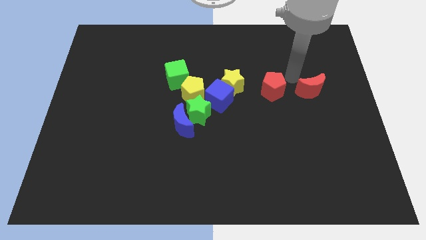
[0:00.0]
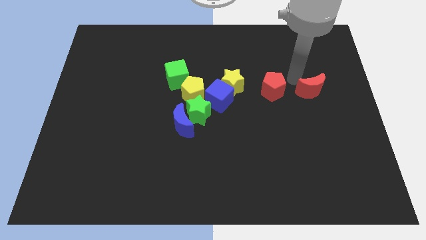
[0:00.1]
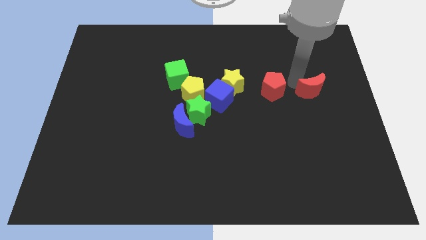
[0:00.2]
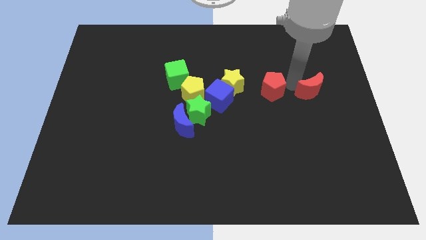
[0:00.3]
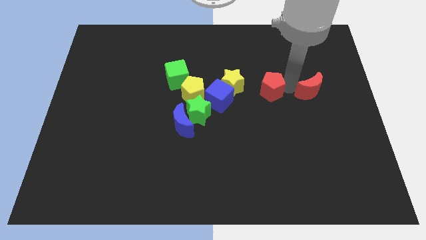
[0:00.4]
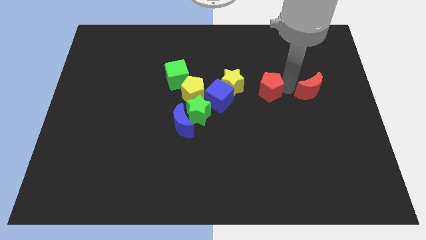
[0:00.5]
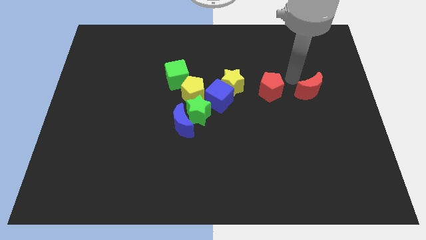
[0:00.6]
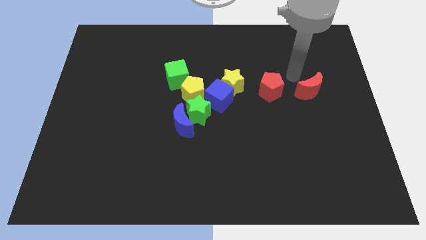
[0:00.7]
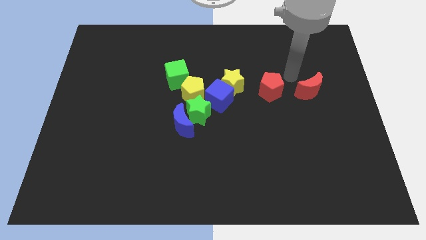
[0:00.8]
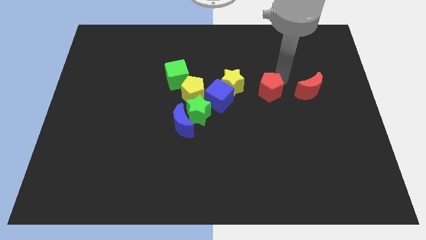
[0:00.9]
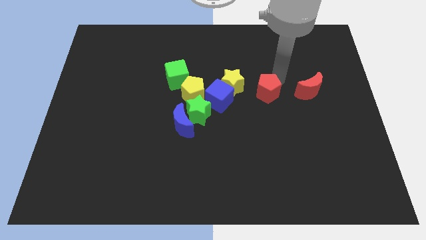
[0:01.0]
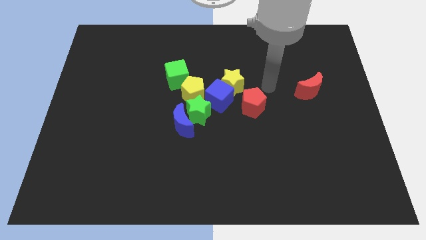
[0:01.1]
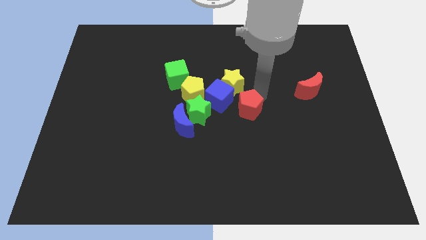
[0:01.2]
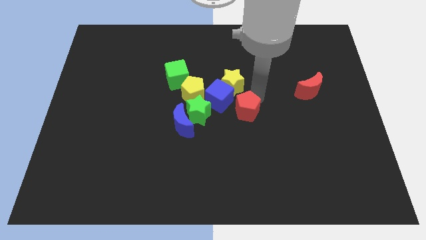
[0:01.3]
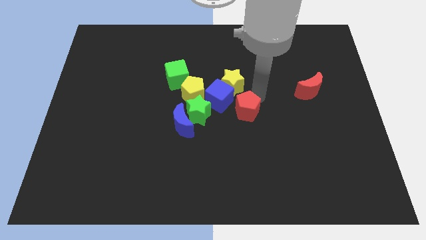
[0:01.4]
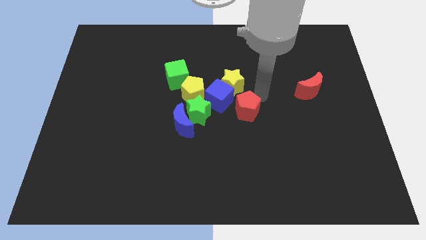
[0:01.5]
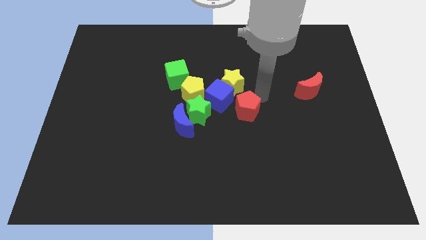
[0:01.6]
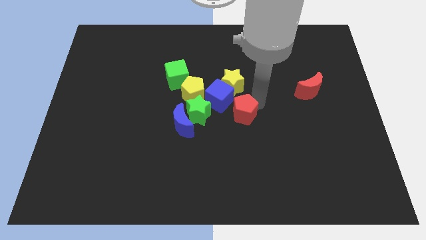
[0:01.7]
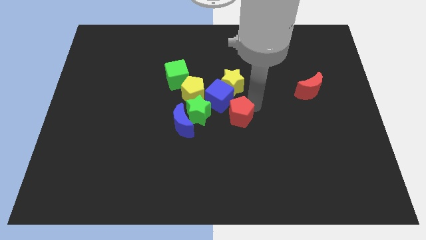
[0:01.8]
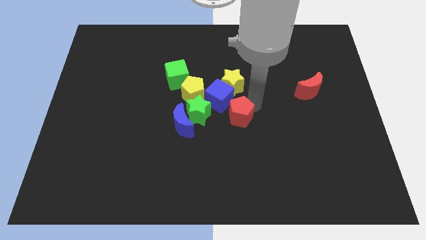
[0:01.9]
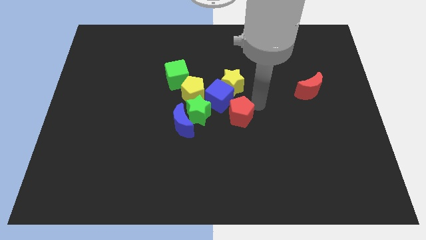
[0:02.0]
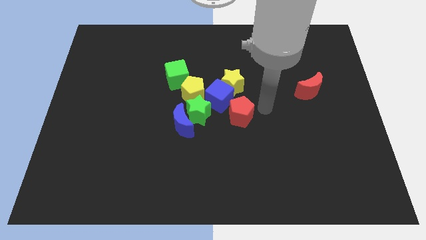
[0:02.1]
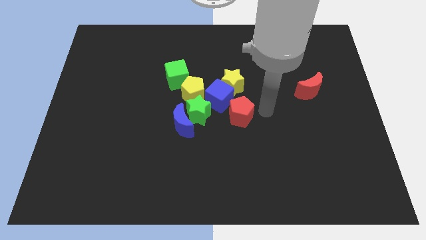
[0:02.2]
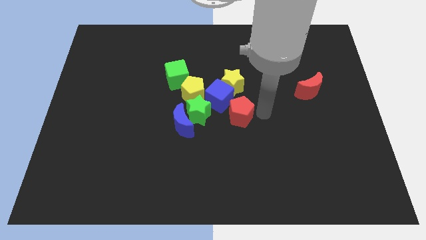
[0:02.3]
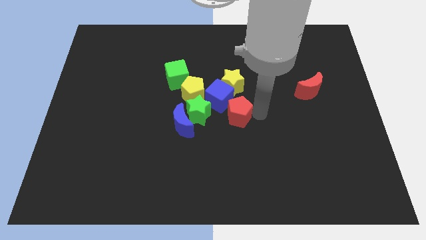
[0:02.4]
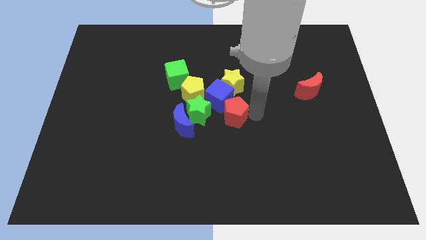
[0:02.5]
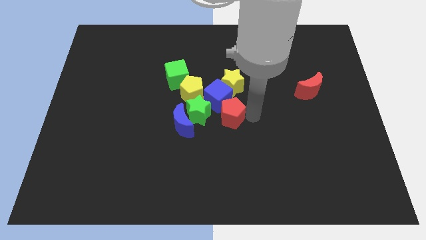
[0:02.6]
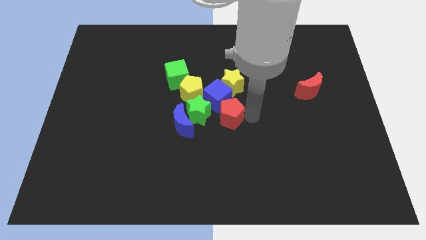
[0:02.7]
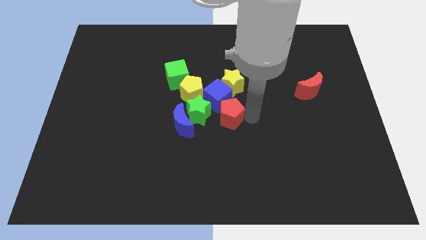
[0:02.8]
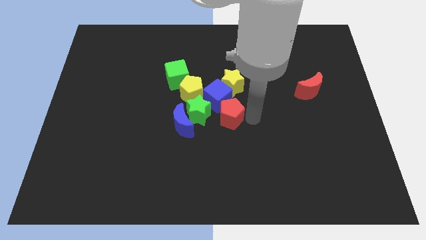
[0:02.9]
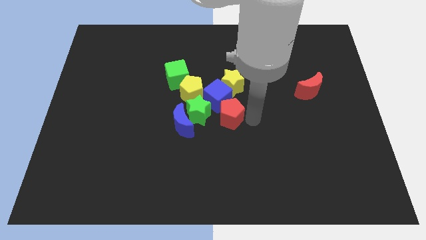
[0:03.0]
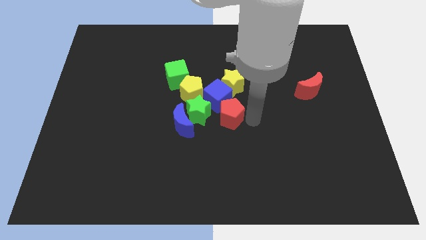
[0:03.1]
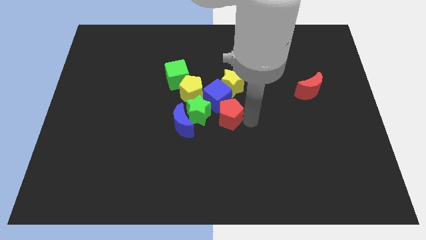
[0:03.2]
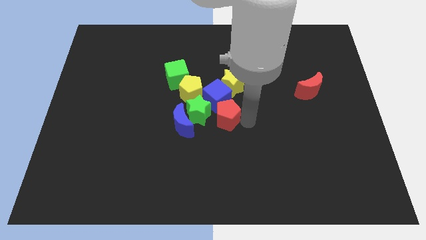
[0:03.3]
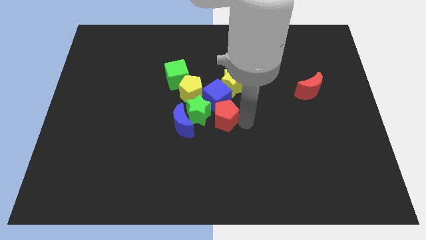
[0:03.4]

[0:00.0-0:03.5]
move the red pentagon towards the blue cube

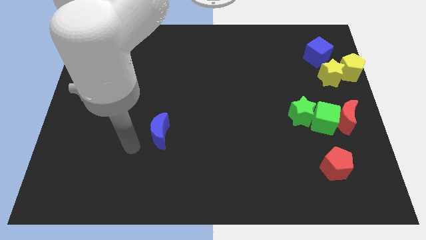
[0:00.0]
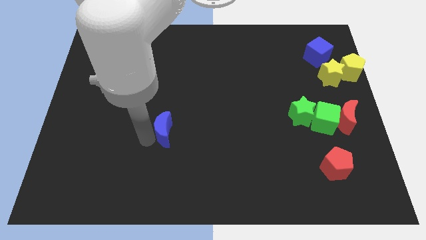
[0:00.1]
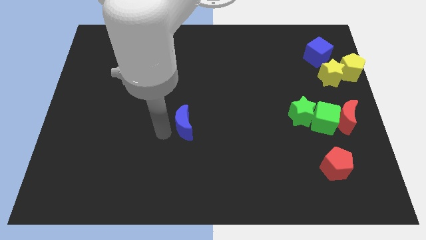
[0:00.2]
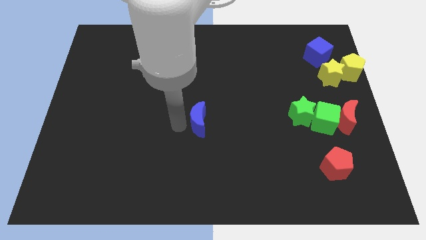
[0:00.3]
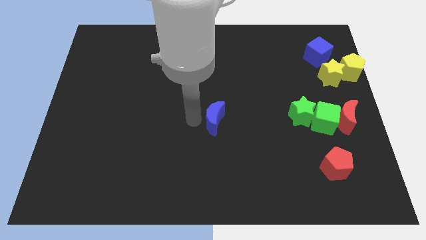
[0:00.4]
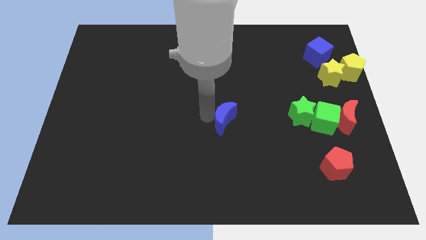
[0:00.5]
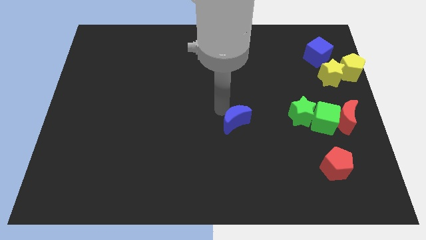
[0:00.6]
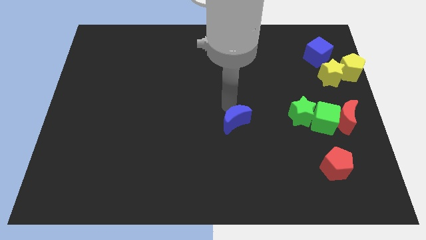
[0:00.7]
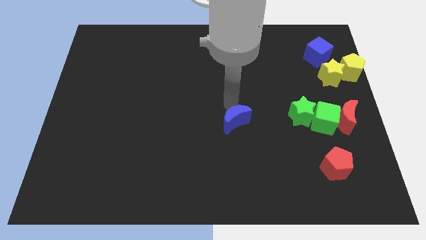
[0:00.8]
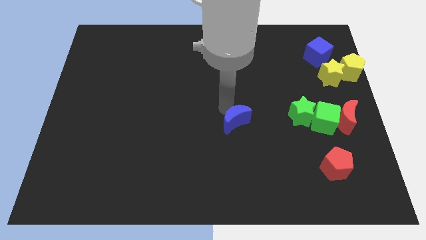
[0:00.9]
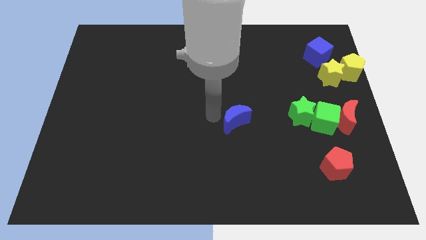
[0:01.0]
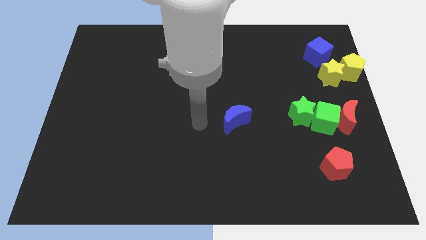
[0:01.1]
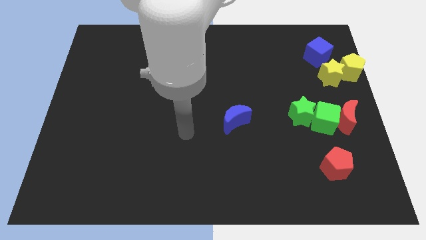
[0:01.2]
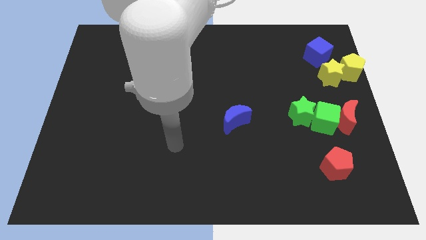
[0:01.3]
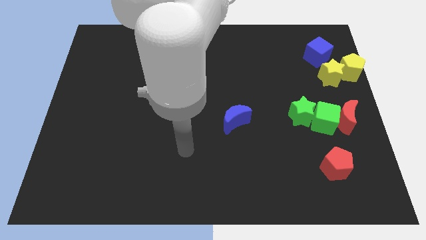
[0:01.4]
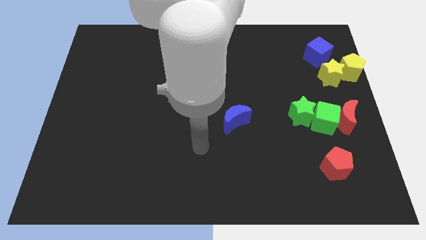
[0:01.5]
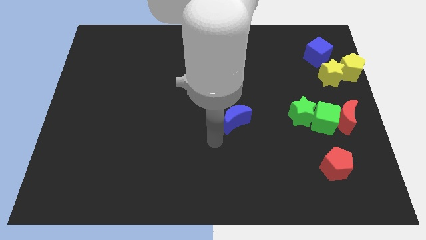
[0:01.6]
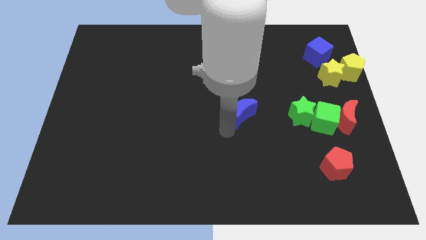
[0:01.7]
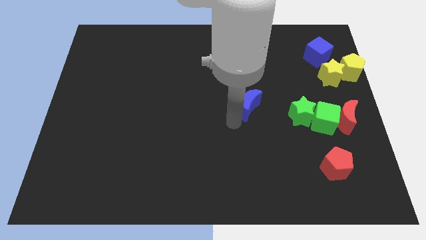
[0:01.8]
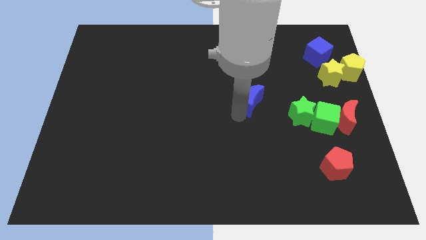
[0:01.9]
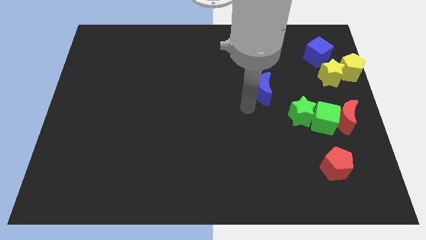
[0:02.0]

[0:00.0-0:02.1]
place the blue moon diagonally to red pentagon

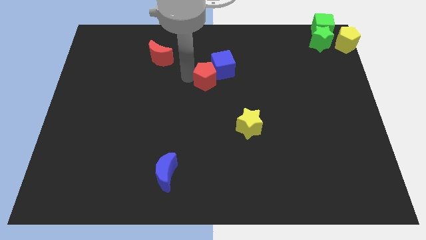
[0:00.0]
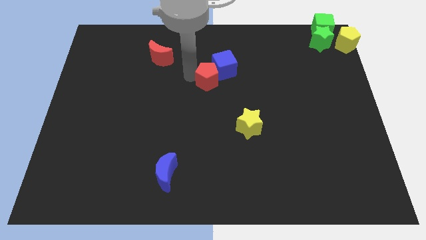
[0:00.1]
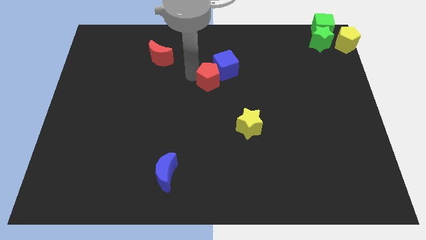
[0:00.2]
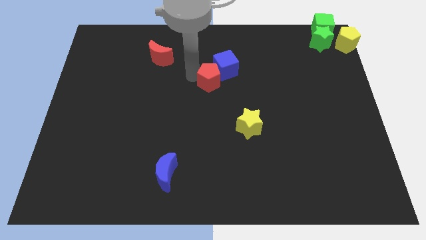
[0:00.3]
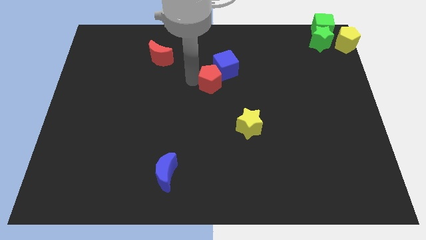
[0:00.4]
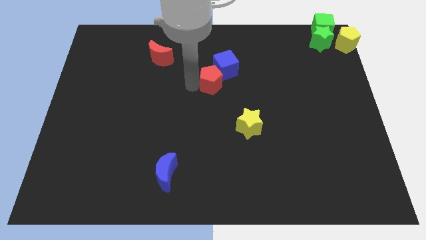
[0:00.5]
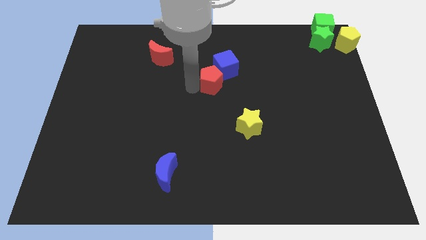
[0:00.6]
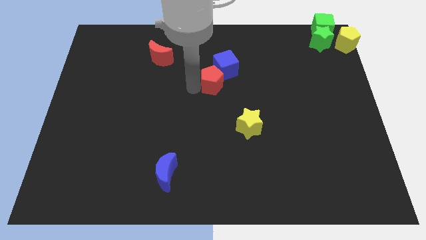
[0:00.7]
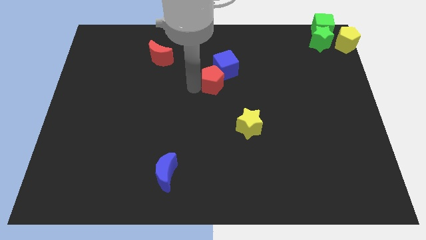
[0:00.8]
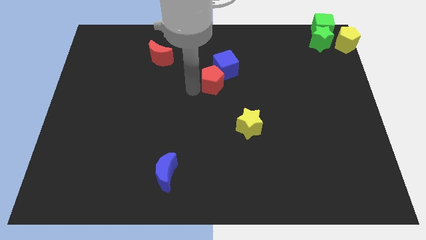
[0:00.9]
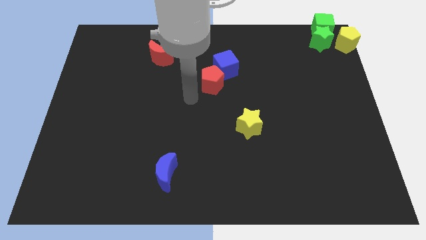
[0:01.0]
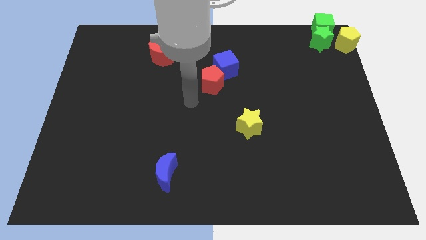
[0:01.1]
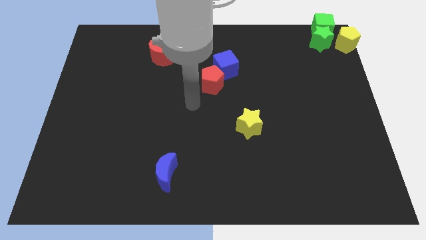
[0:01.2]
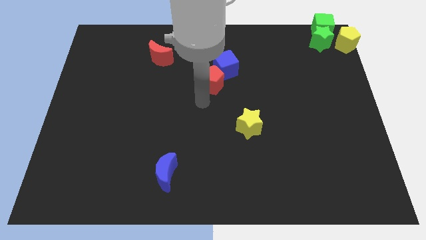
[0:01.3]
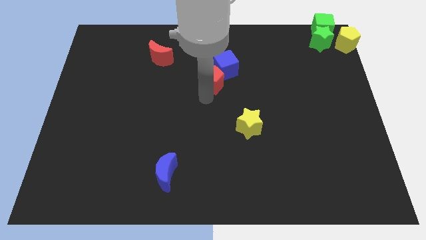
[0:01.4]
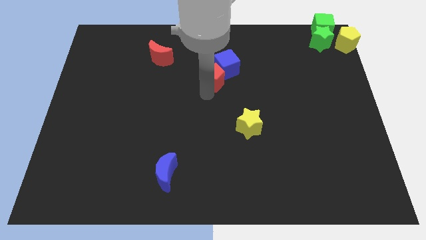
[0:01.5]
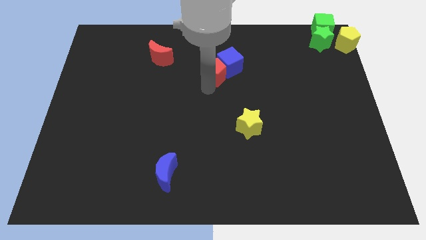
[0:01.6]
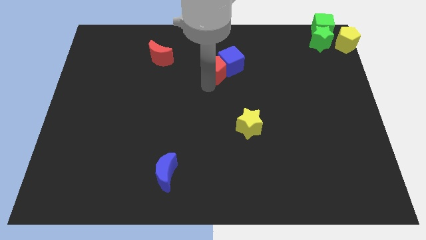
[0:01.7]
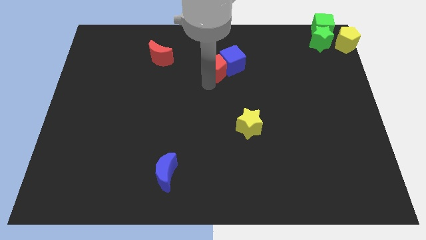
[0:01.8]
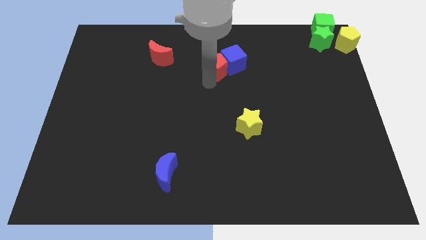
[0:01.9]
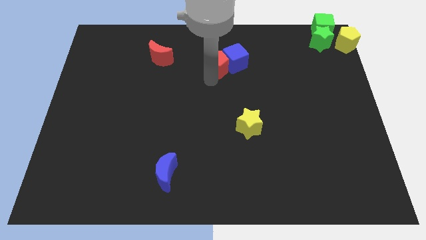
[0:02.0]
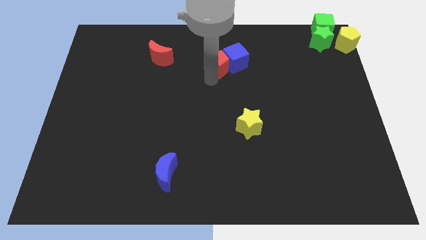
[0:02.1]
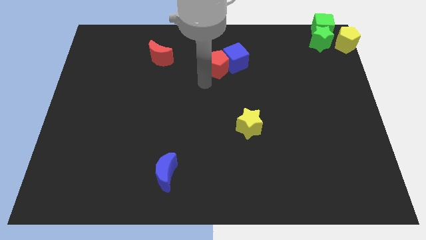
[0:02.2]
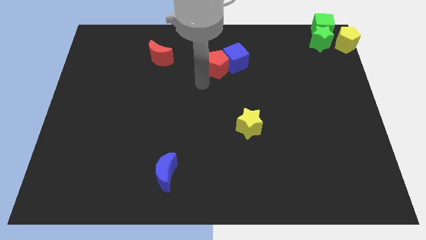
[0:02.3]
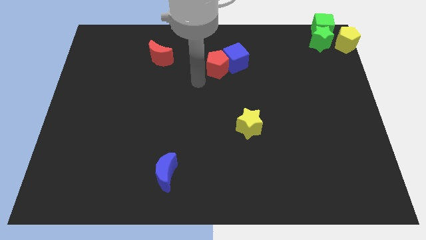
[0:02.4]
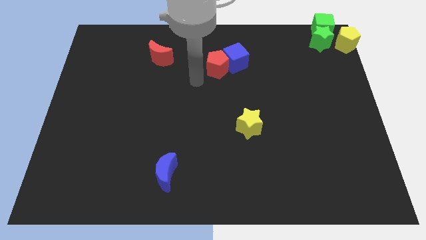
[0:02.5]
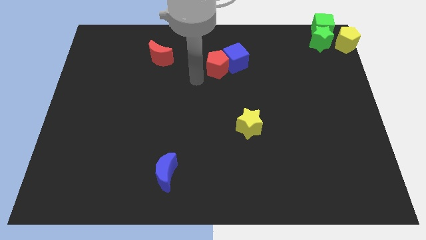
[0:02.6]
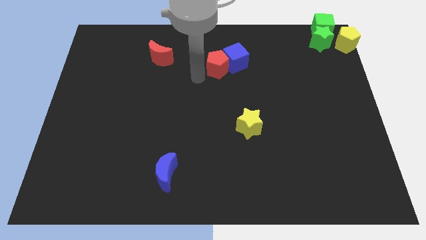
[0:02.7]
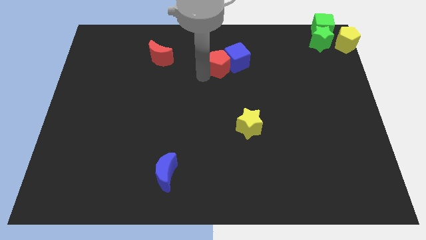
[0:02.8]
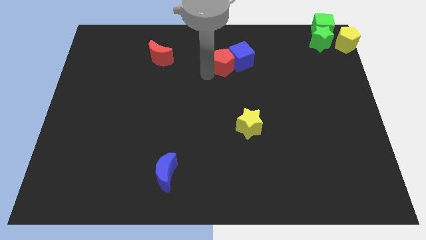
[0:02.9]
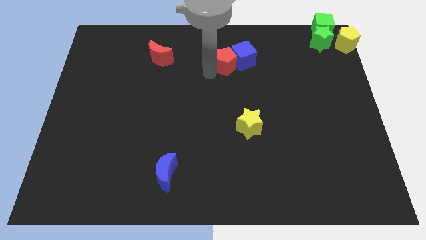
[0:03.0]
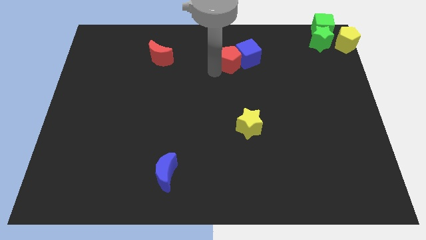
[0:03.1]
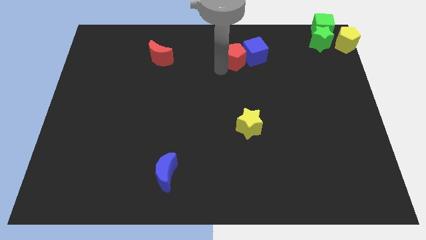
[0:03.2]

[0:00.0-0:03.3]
move the red pentagon along with blue cube slightly toward the top right of the board

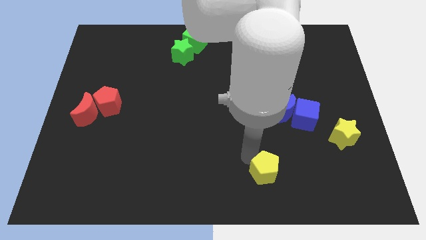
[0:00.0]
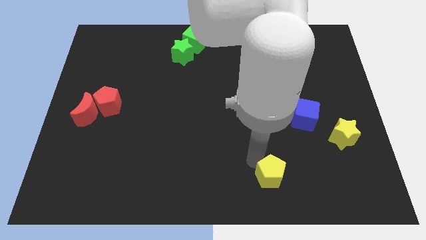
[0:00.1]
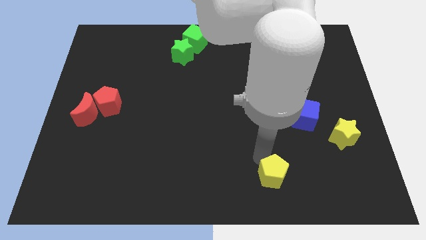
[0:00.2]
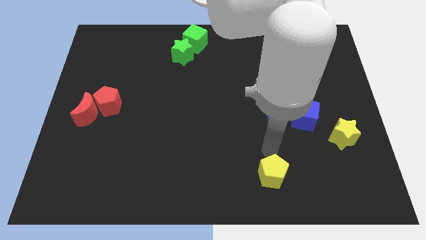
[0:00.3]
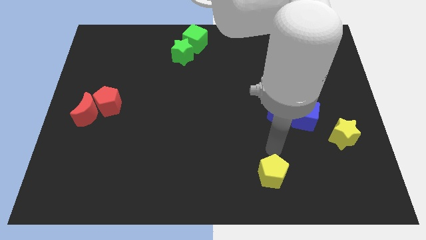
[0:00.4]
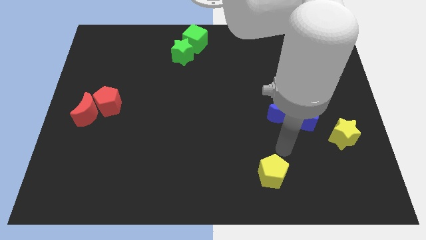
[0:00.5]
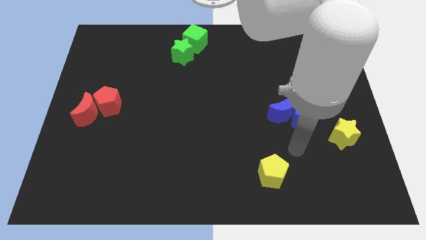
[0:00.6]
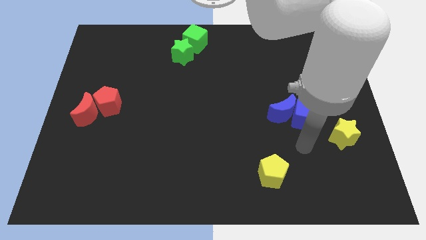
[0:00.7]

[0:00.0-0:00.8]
push the yellow pentagon slightly to the right
